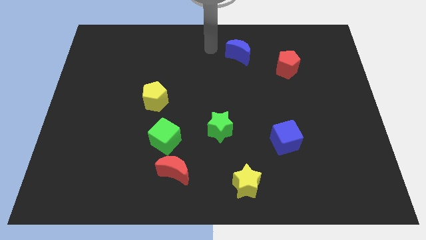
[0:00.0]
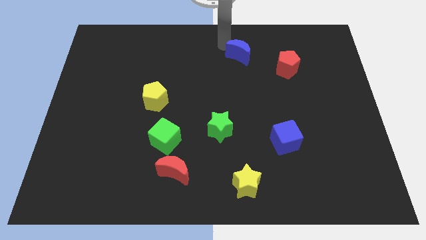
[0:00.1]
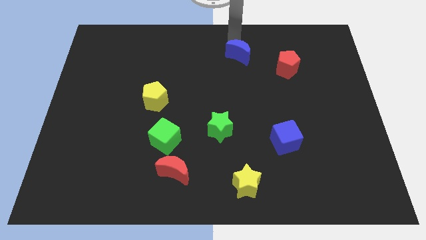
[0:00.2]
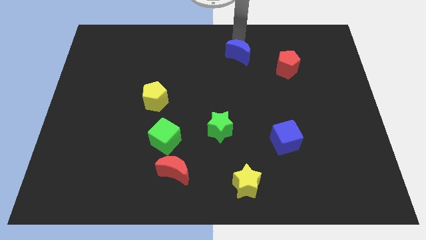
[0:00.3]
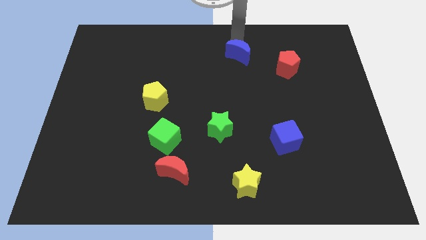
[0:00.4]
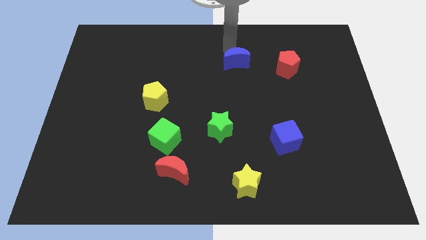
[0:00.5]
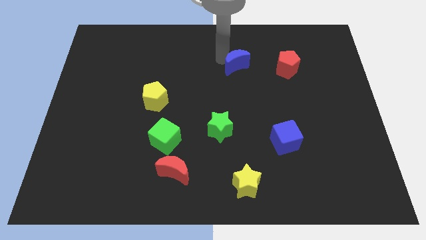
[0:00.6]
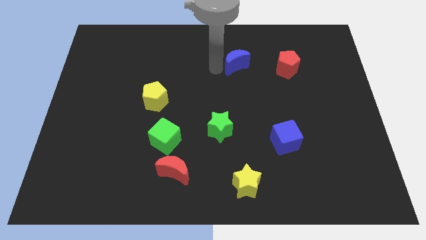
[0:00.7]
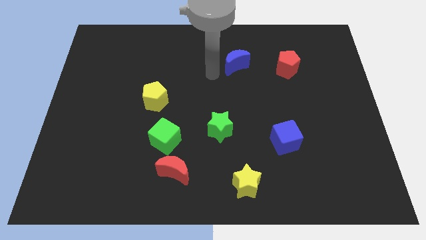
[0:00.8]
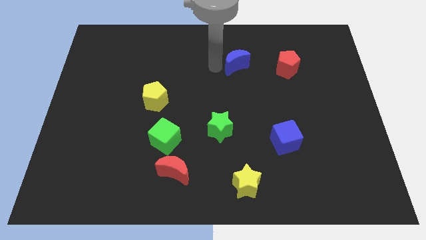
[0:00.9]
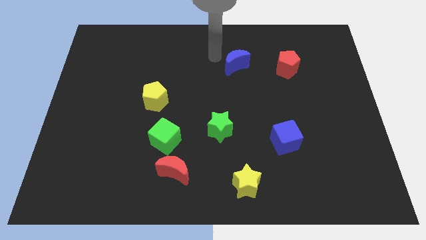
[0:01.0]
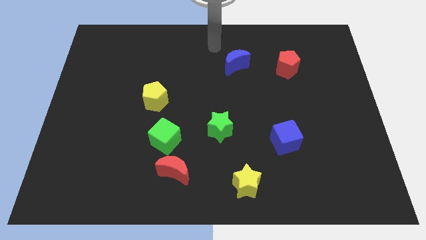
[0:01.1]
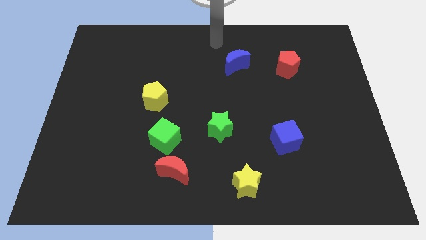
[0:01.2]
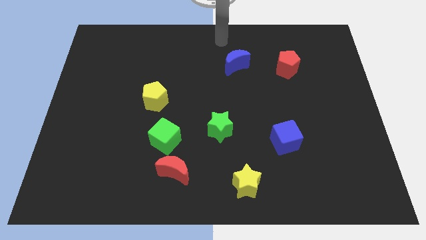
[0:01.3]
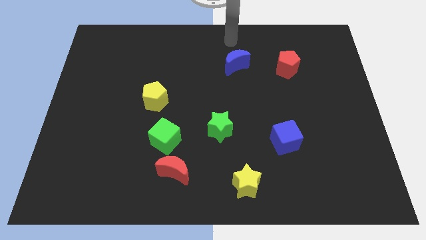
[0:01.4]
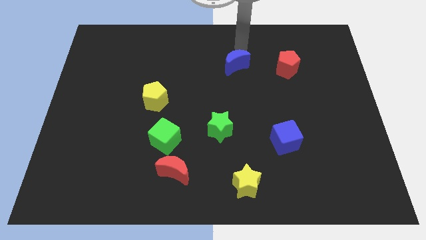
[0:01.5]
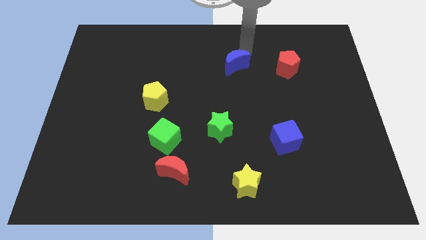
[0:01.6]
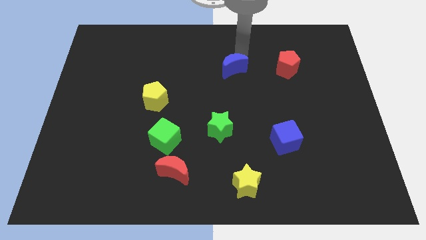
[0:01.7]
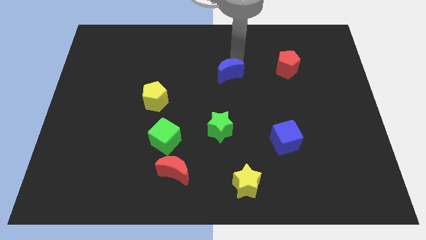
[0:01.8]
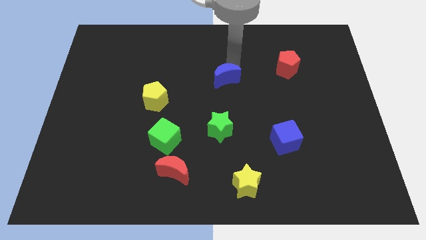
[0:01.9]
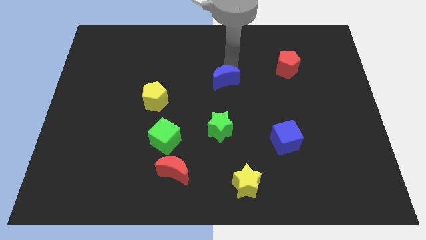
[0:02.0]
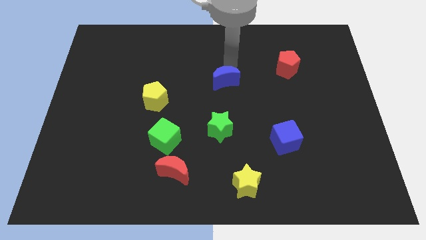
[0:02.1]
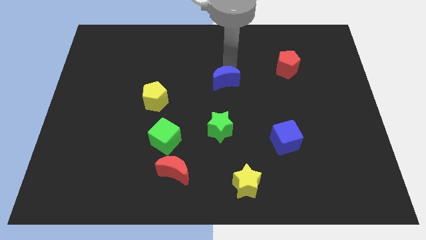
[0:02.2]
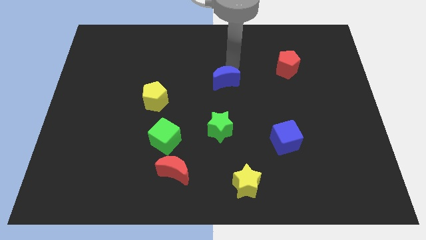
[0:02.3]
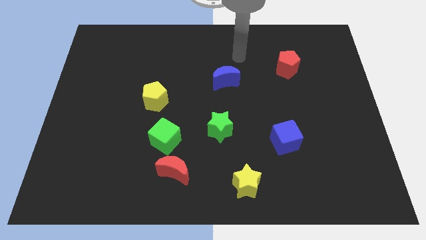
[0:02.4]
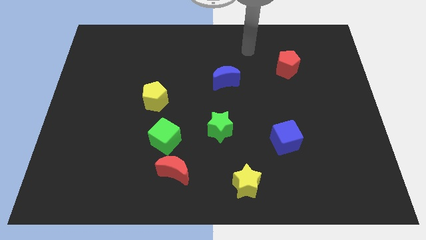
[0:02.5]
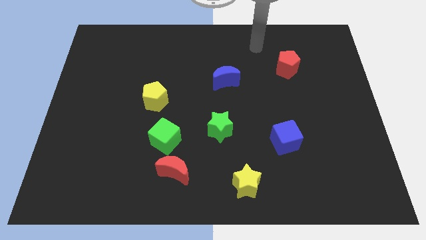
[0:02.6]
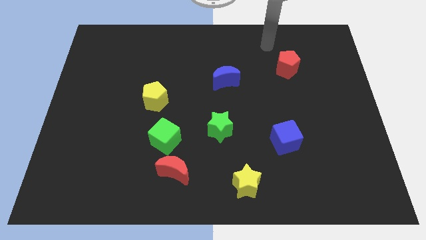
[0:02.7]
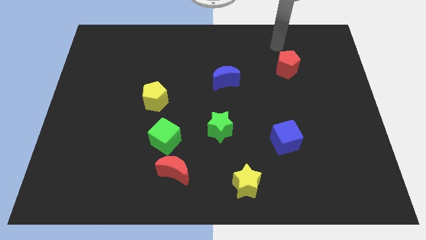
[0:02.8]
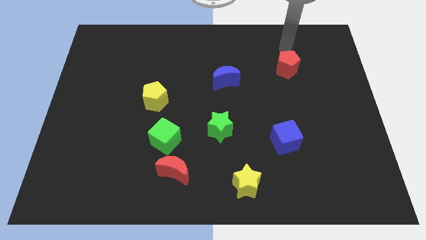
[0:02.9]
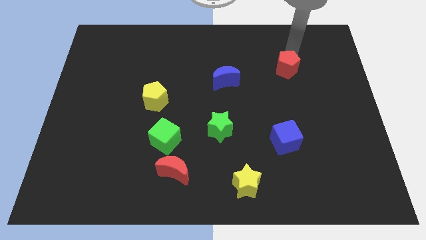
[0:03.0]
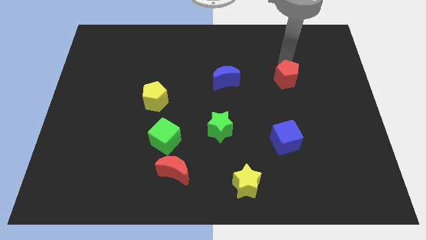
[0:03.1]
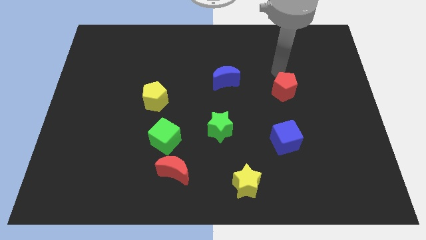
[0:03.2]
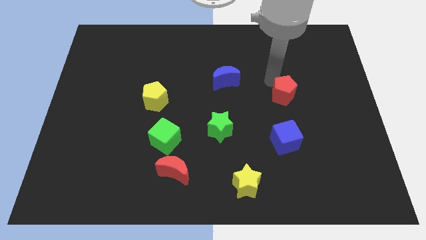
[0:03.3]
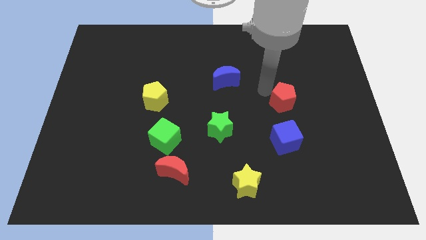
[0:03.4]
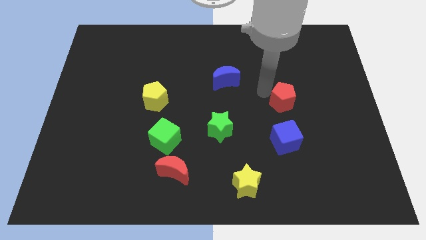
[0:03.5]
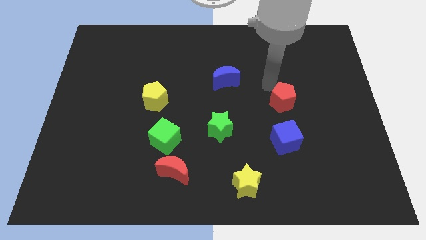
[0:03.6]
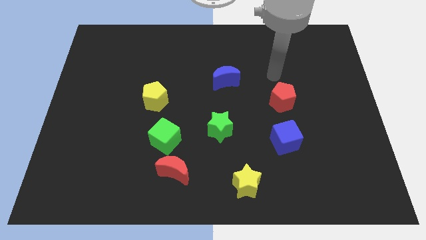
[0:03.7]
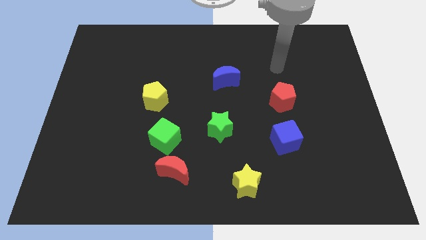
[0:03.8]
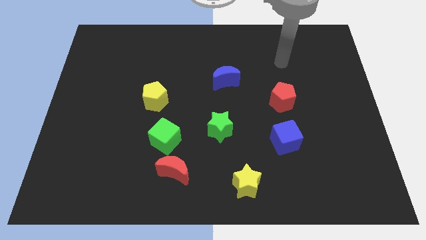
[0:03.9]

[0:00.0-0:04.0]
push the red pentagon above the blue cube

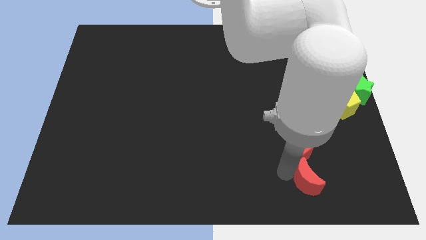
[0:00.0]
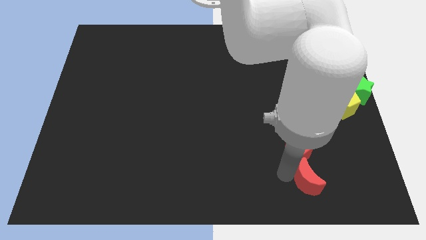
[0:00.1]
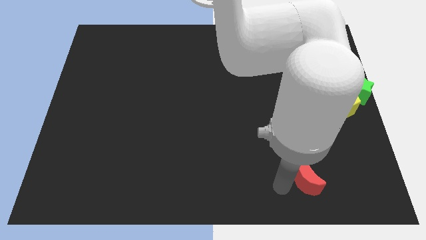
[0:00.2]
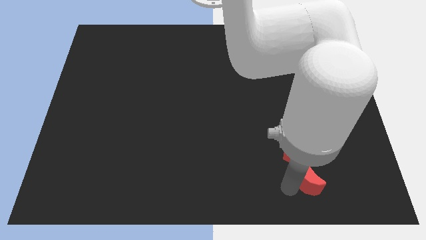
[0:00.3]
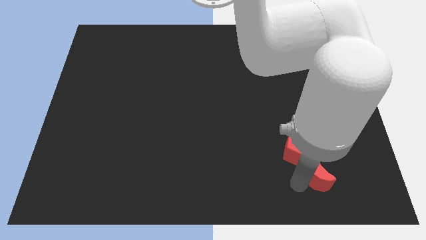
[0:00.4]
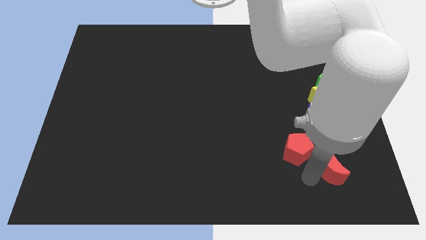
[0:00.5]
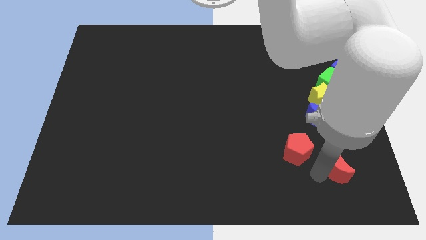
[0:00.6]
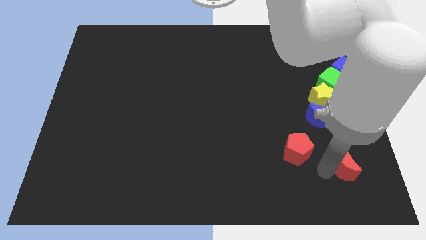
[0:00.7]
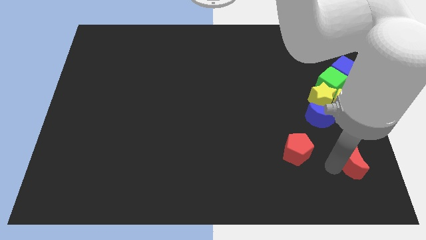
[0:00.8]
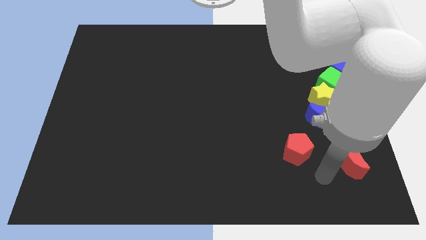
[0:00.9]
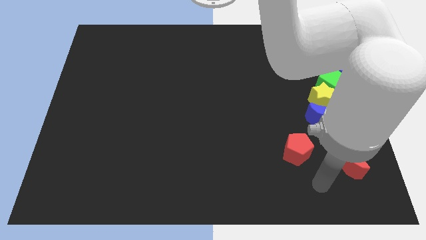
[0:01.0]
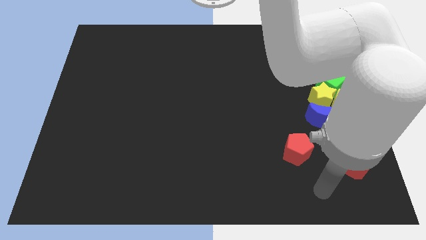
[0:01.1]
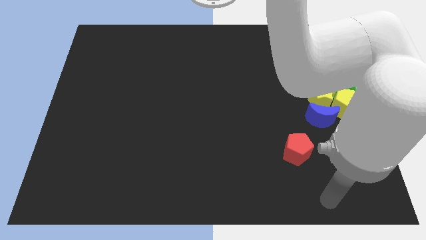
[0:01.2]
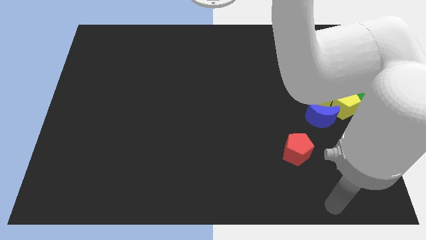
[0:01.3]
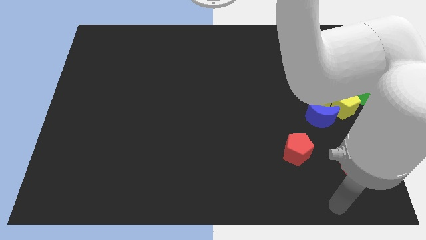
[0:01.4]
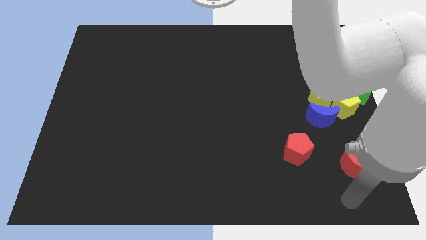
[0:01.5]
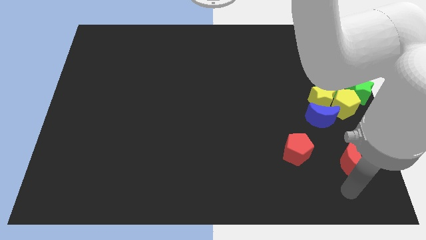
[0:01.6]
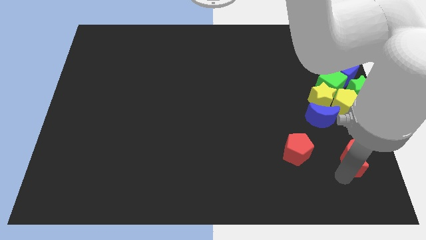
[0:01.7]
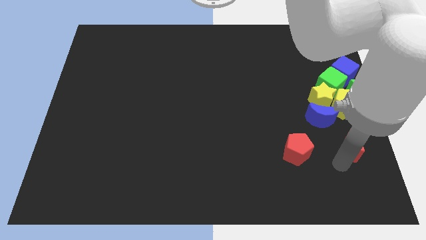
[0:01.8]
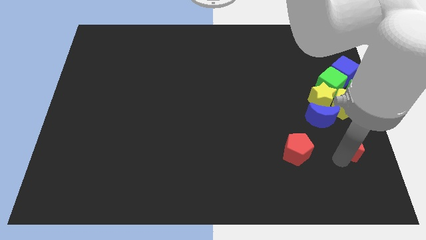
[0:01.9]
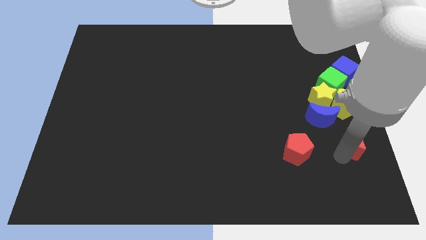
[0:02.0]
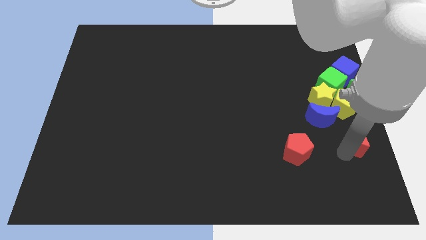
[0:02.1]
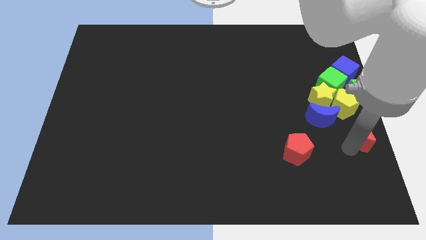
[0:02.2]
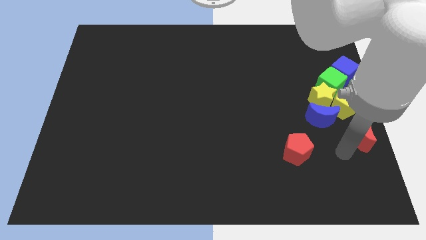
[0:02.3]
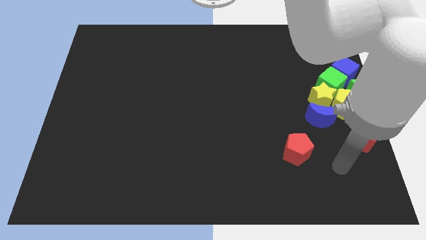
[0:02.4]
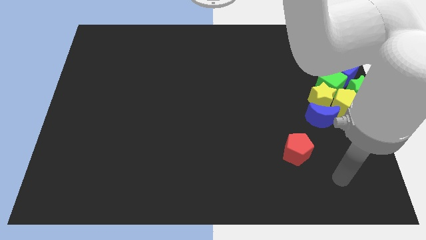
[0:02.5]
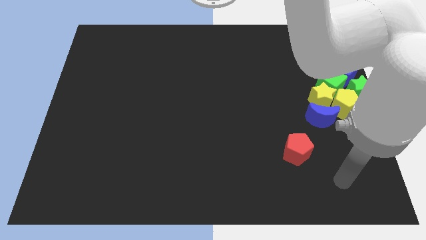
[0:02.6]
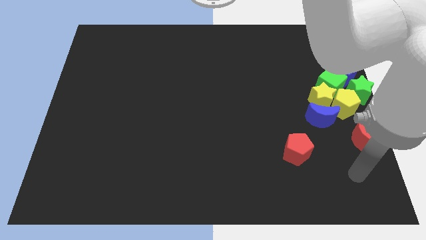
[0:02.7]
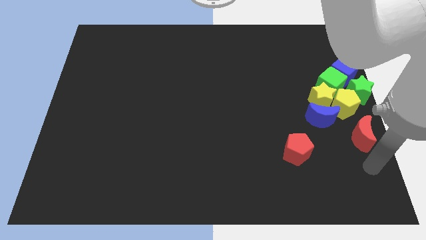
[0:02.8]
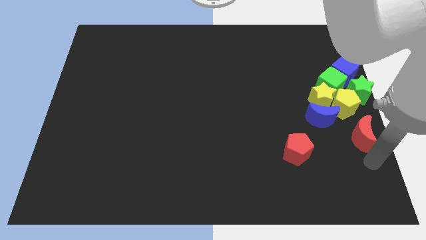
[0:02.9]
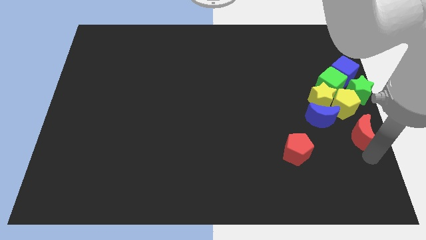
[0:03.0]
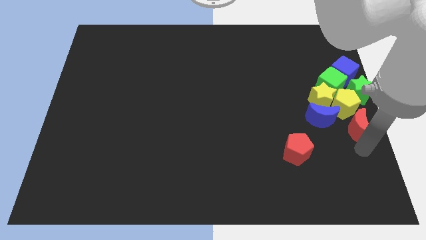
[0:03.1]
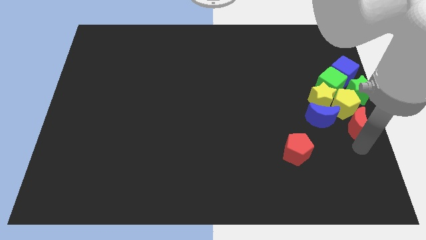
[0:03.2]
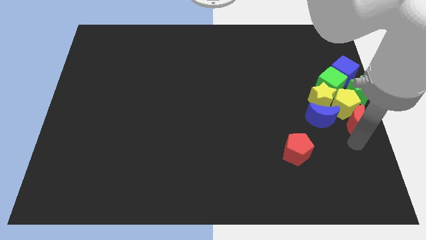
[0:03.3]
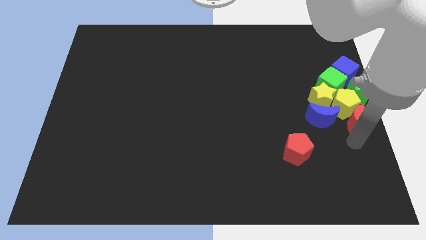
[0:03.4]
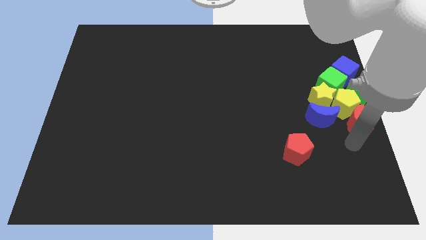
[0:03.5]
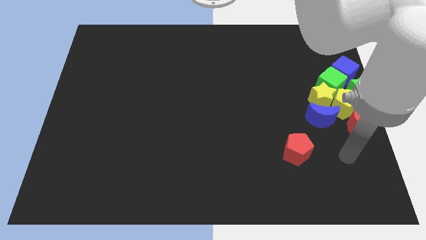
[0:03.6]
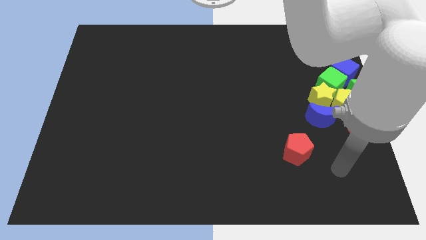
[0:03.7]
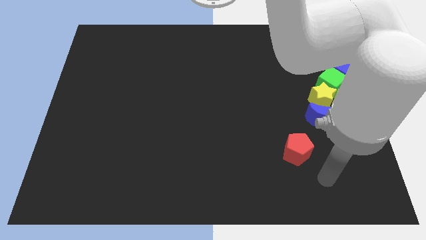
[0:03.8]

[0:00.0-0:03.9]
push the red moon into a group of blocks

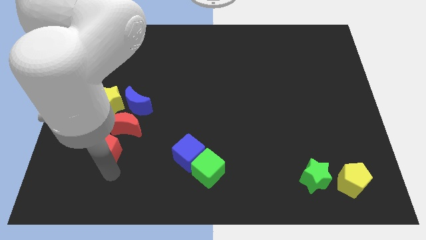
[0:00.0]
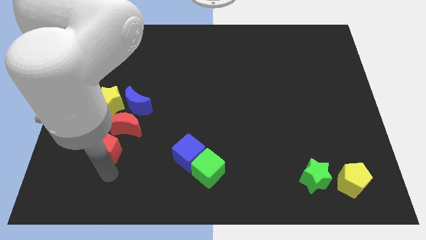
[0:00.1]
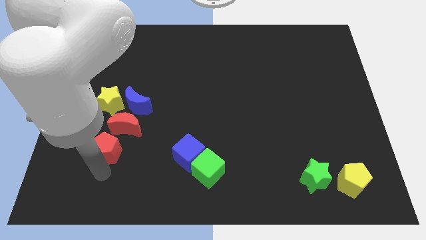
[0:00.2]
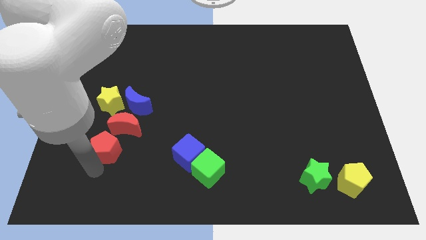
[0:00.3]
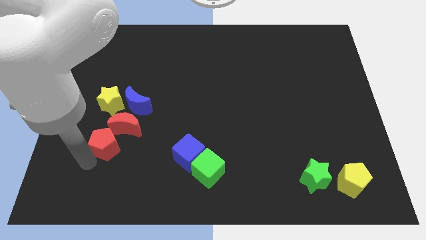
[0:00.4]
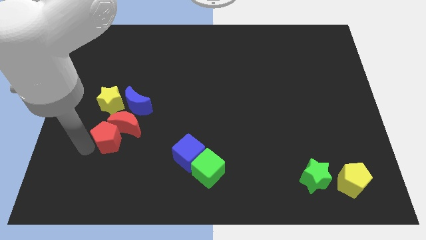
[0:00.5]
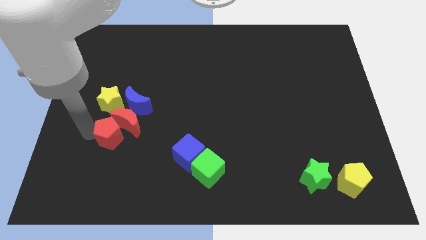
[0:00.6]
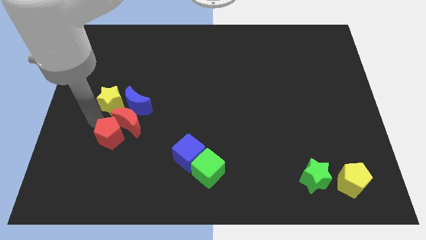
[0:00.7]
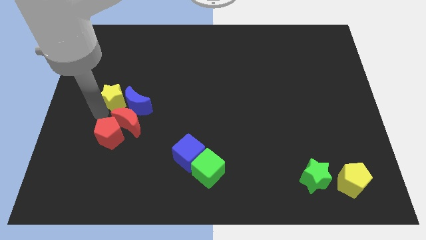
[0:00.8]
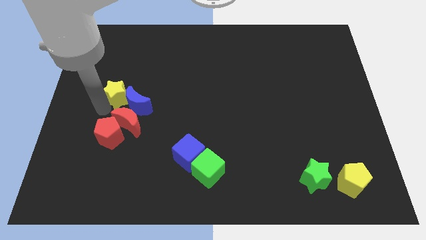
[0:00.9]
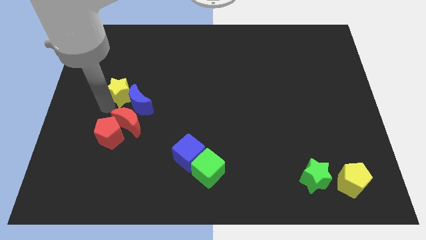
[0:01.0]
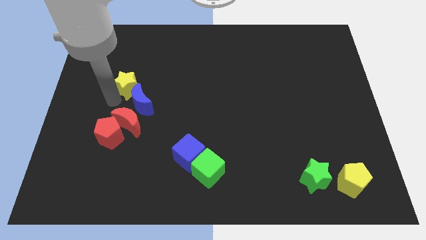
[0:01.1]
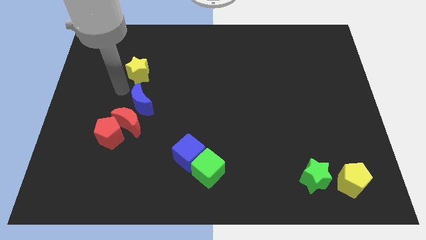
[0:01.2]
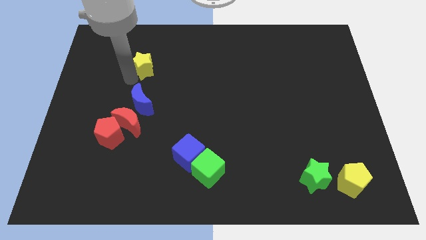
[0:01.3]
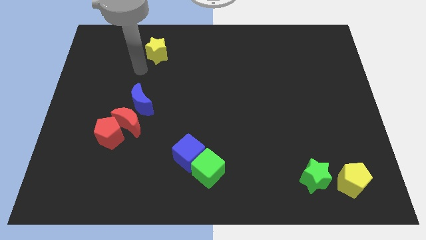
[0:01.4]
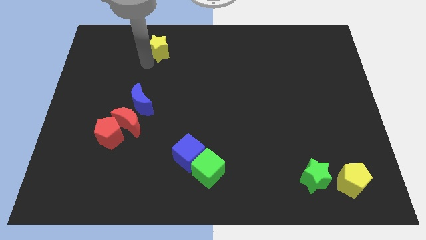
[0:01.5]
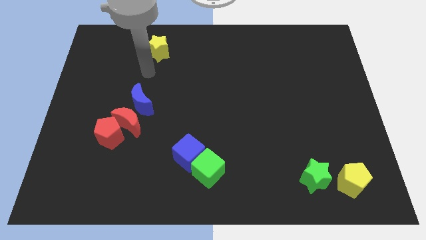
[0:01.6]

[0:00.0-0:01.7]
place yellow star to the top of blue moon
